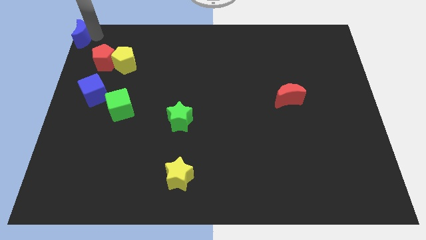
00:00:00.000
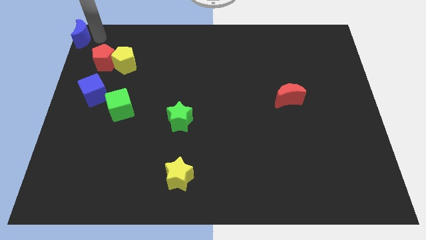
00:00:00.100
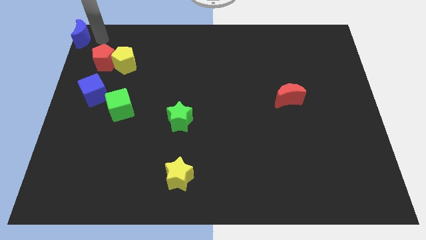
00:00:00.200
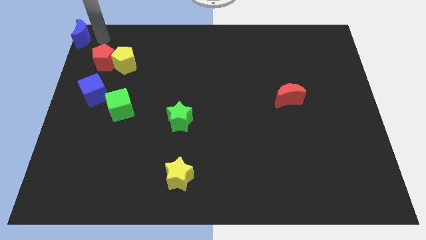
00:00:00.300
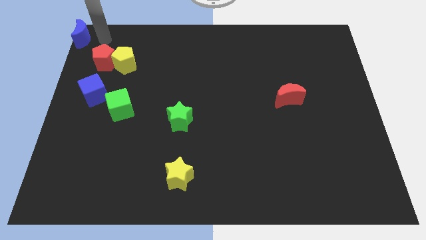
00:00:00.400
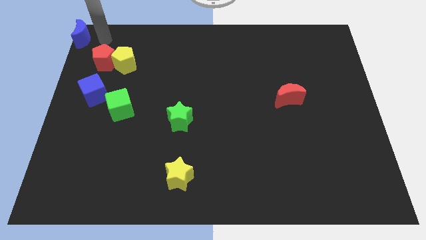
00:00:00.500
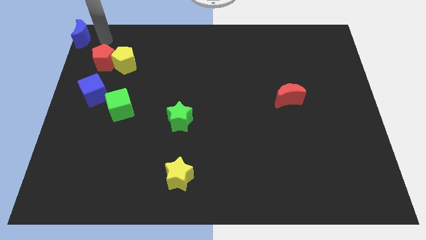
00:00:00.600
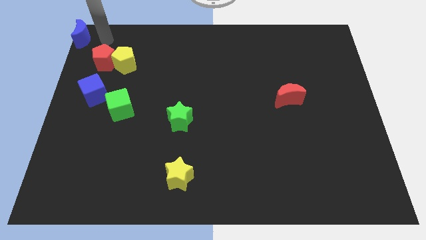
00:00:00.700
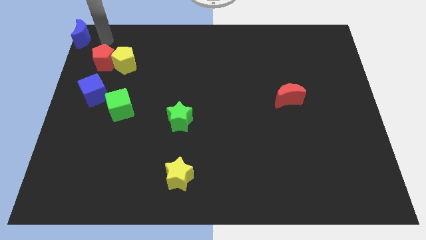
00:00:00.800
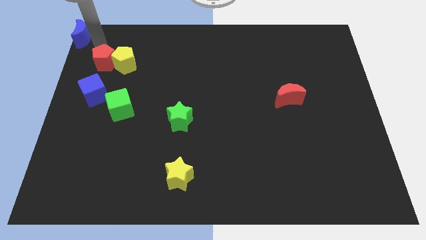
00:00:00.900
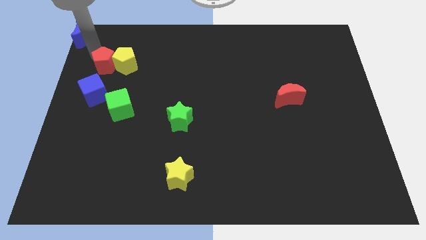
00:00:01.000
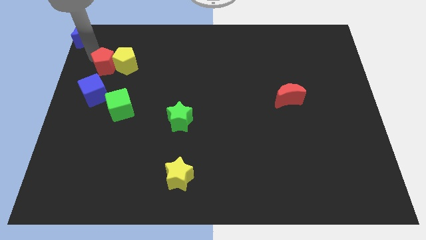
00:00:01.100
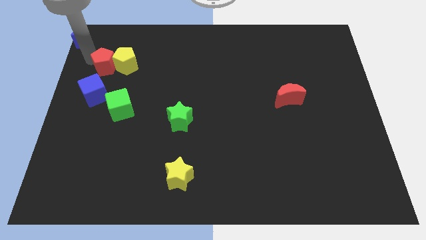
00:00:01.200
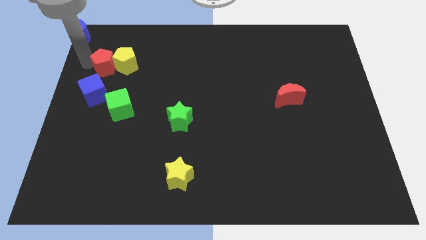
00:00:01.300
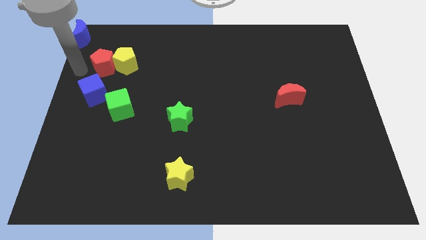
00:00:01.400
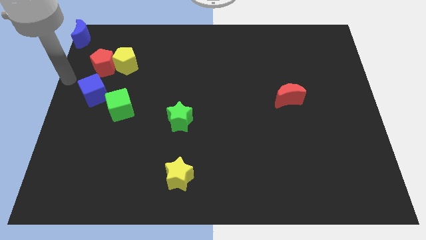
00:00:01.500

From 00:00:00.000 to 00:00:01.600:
slightly touch left to the red pentagon

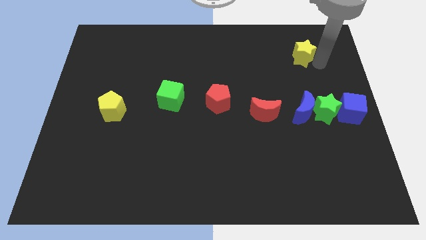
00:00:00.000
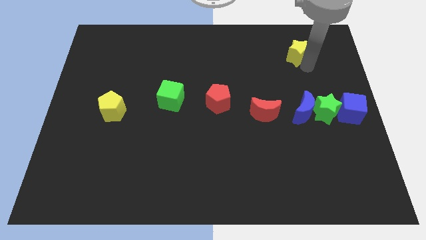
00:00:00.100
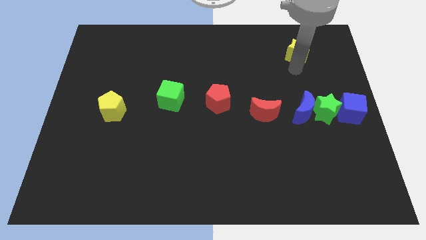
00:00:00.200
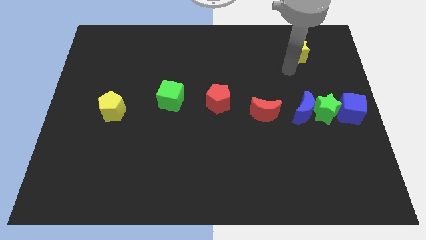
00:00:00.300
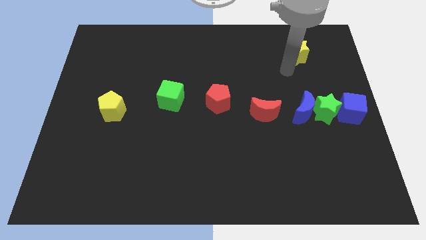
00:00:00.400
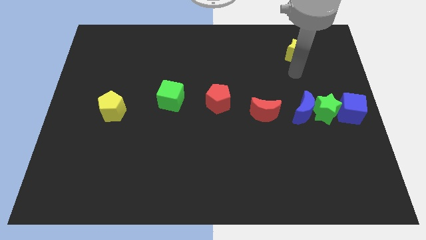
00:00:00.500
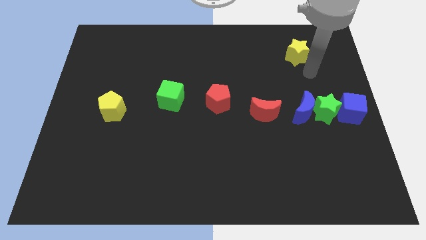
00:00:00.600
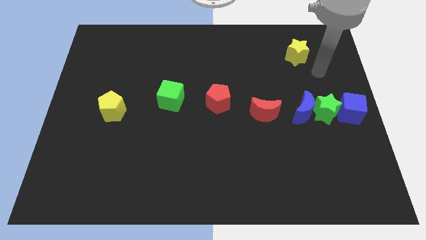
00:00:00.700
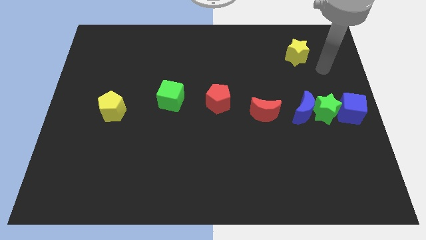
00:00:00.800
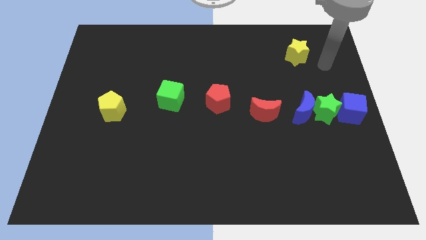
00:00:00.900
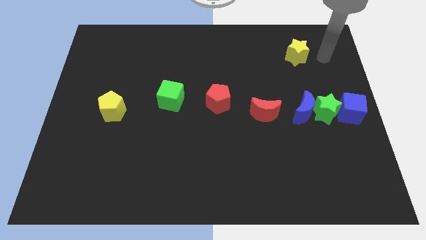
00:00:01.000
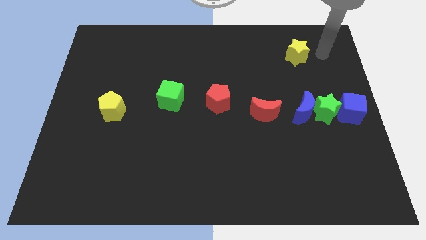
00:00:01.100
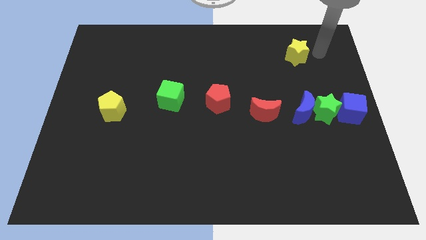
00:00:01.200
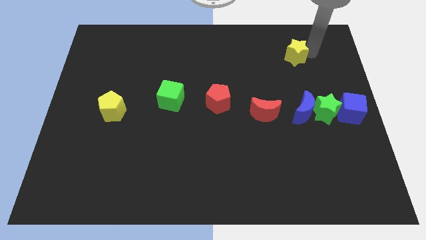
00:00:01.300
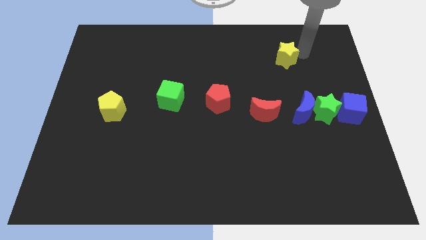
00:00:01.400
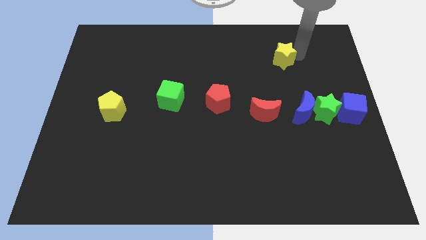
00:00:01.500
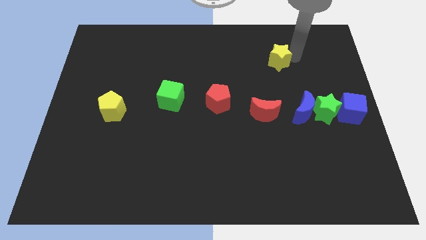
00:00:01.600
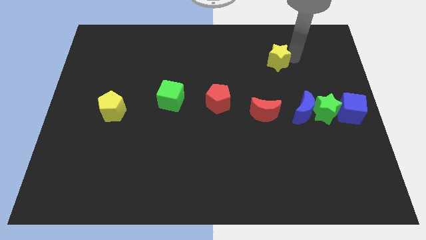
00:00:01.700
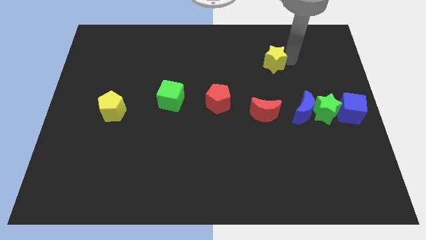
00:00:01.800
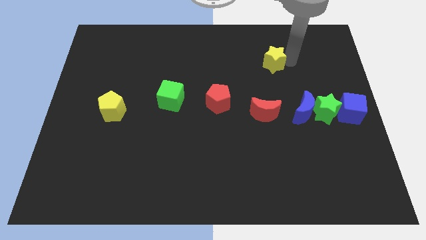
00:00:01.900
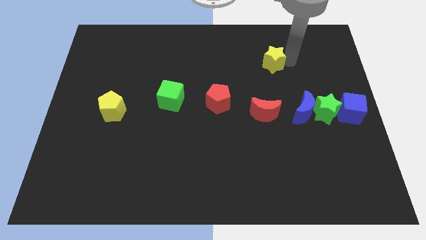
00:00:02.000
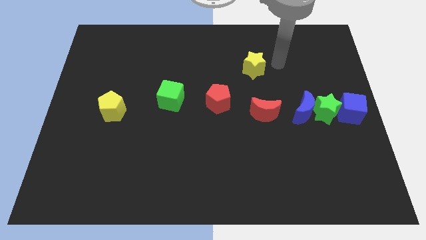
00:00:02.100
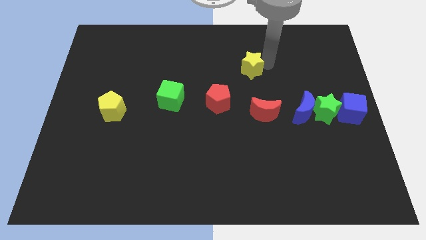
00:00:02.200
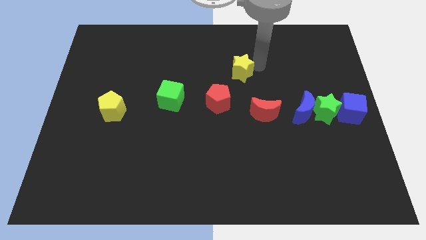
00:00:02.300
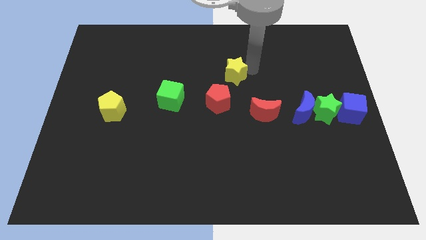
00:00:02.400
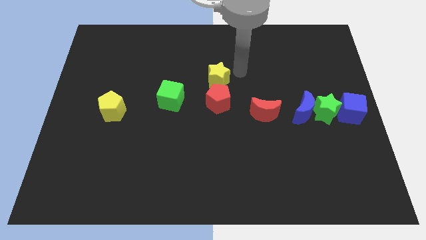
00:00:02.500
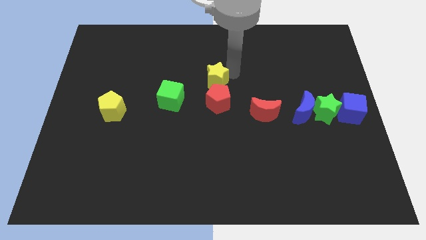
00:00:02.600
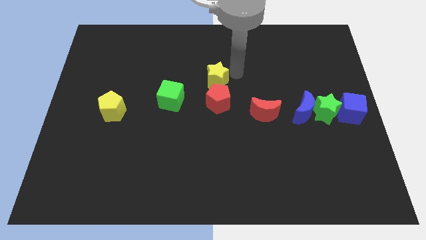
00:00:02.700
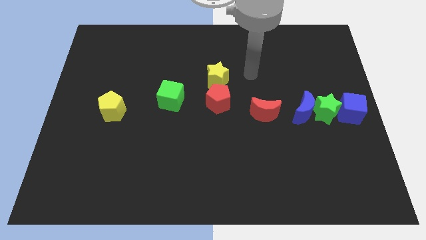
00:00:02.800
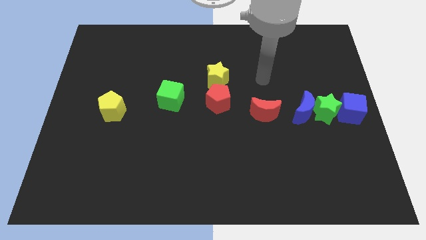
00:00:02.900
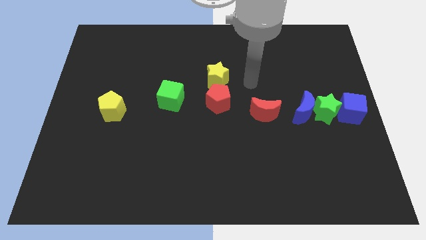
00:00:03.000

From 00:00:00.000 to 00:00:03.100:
place yellow star on top of red pentagon

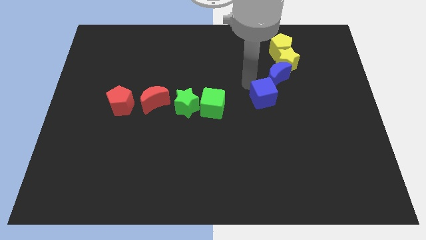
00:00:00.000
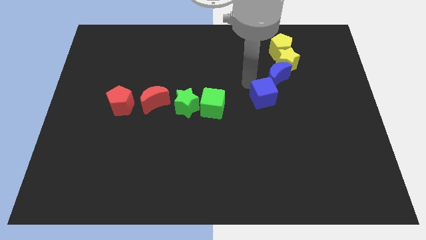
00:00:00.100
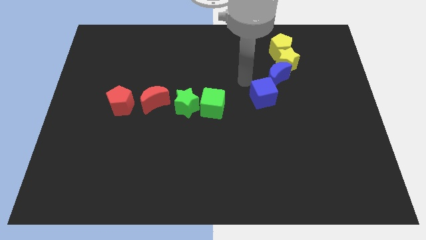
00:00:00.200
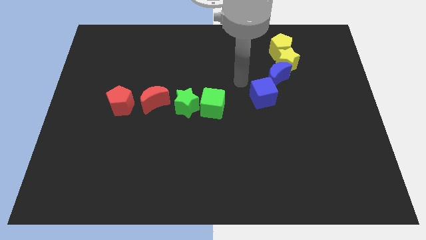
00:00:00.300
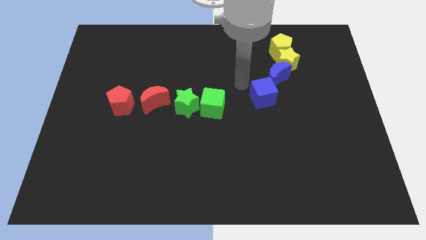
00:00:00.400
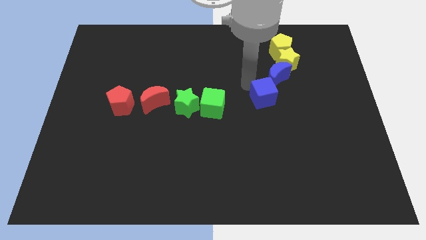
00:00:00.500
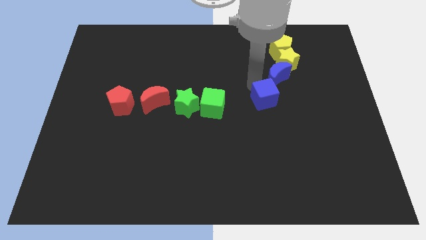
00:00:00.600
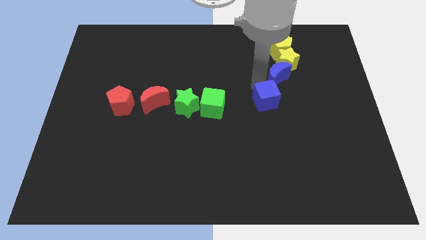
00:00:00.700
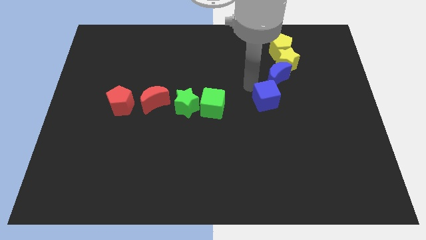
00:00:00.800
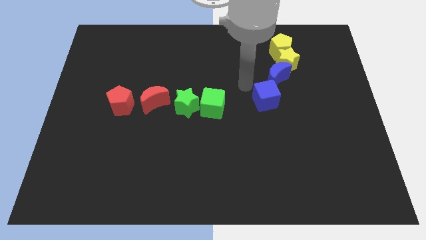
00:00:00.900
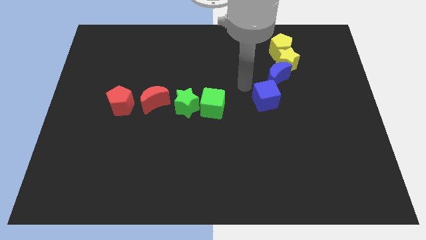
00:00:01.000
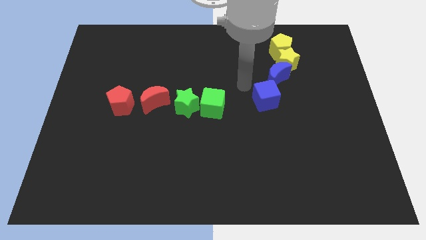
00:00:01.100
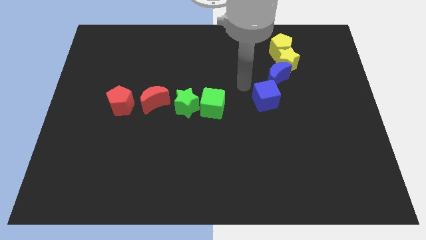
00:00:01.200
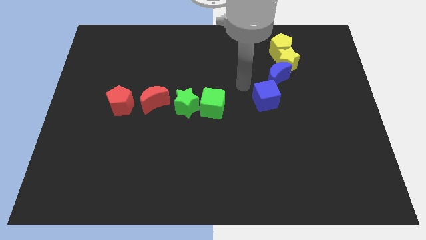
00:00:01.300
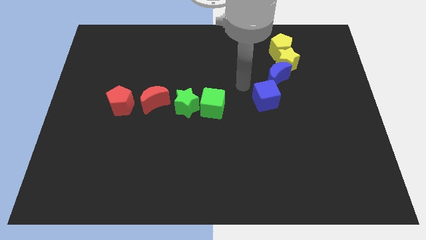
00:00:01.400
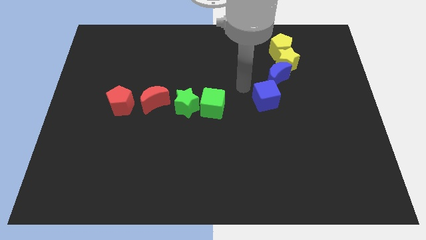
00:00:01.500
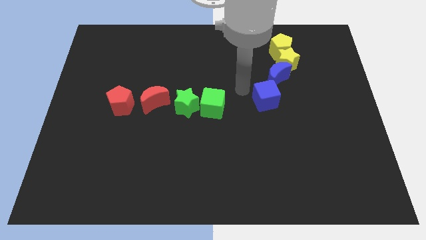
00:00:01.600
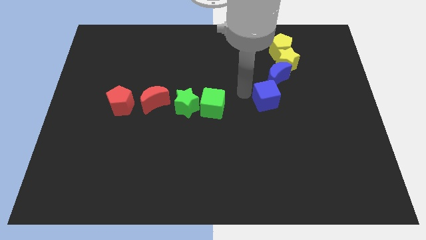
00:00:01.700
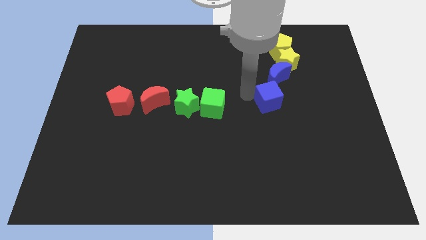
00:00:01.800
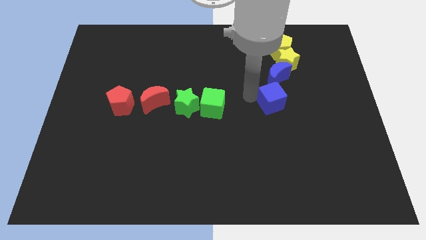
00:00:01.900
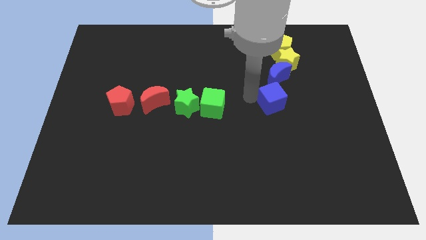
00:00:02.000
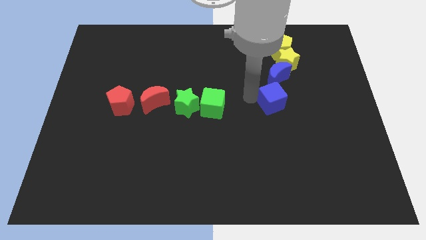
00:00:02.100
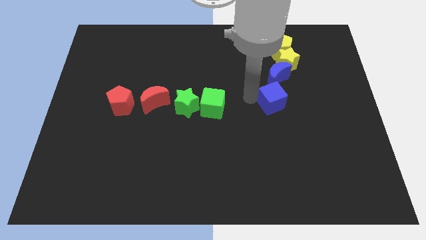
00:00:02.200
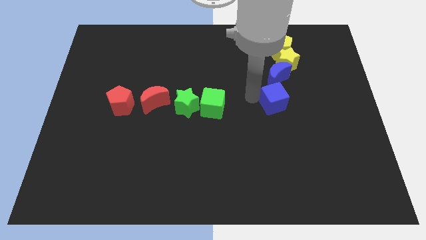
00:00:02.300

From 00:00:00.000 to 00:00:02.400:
place the blue cube to the right of green cube

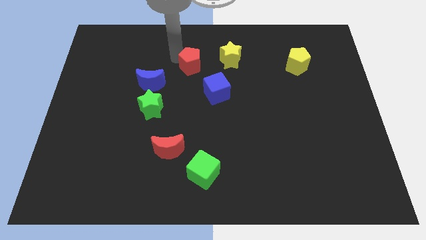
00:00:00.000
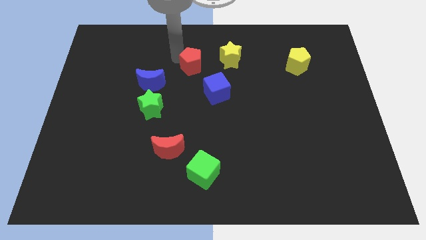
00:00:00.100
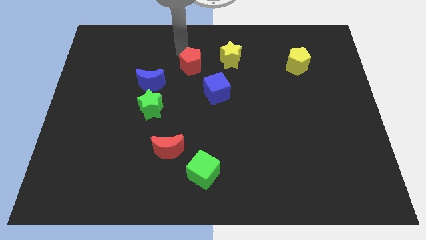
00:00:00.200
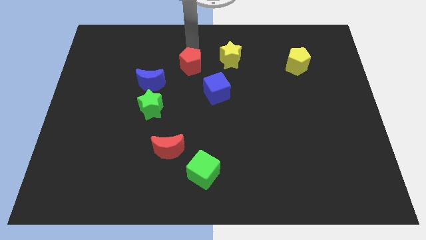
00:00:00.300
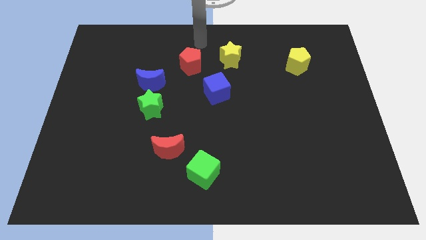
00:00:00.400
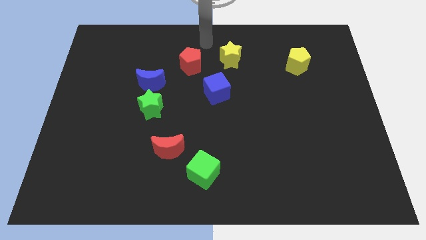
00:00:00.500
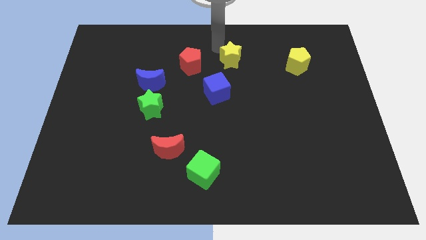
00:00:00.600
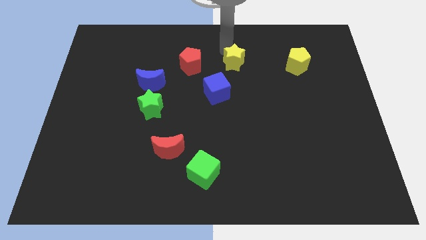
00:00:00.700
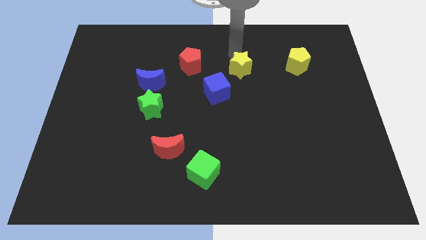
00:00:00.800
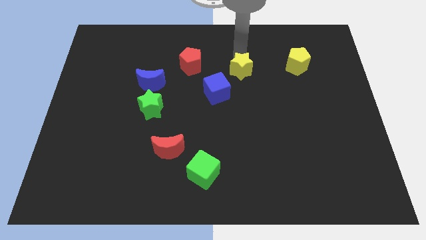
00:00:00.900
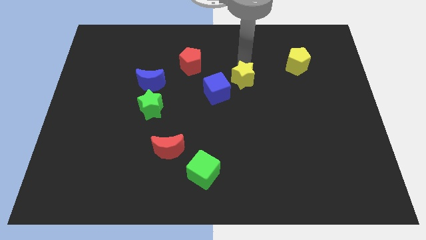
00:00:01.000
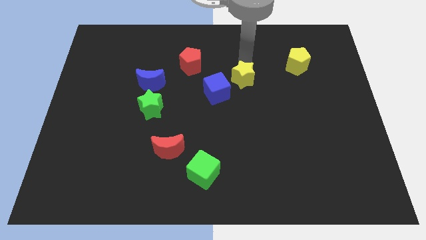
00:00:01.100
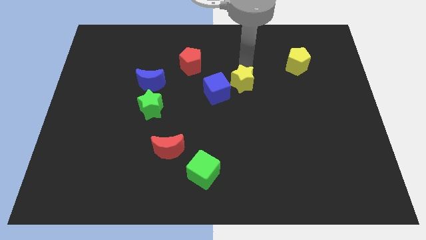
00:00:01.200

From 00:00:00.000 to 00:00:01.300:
push the yellow star to the right of the blue cube

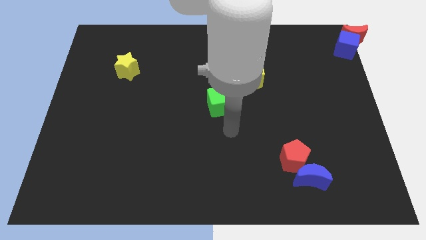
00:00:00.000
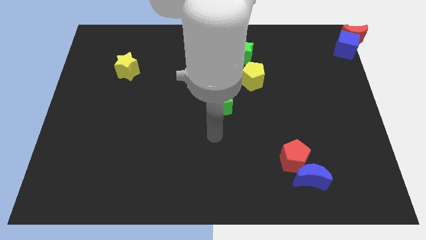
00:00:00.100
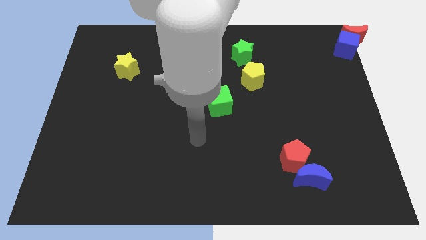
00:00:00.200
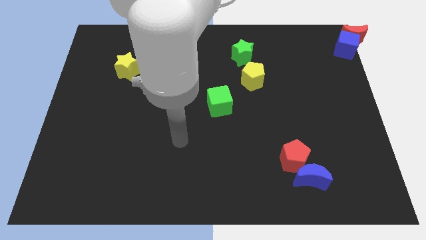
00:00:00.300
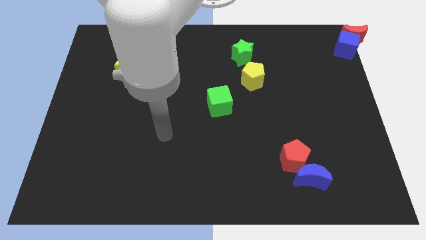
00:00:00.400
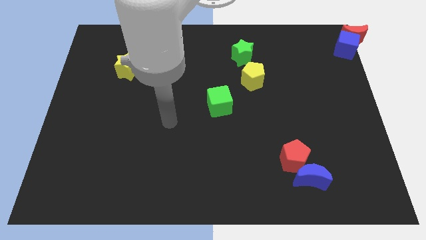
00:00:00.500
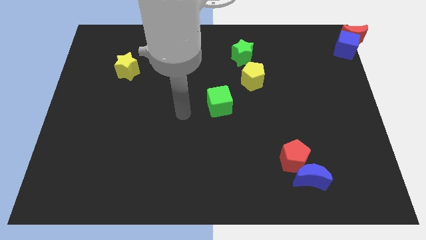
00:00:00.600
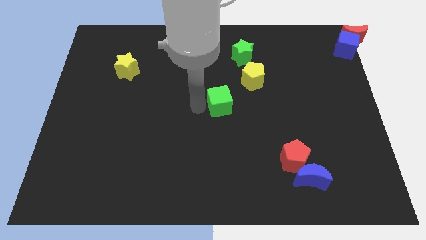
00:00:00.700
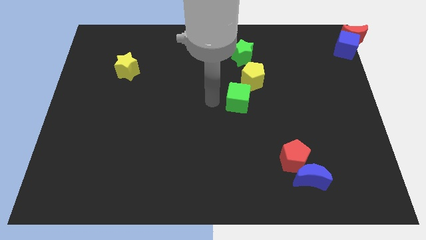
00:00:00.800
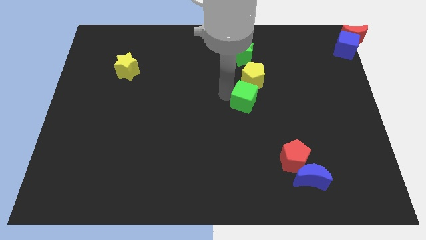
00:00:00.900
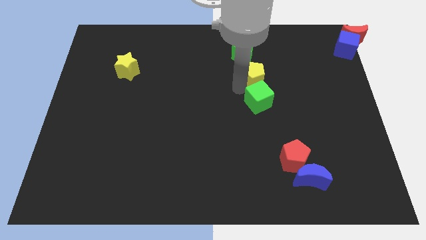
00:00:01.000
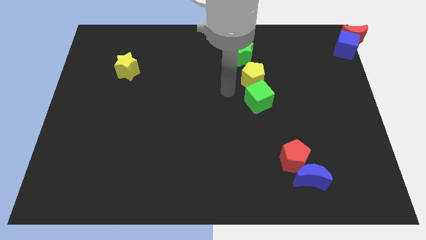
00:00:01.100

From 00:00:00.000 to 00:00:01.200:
place the green cube below the yellow pentagon
